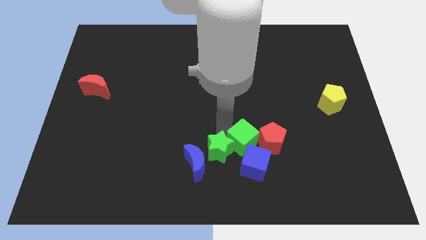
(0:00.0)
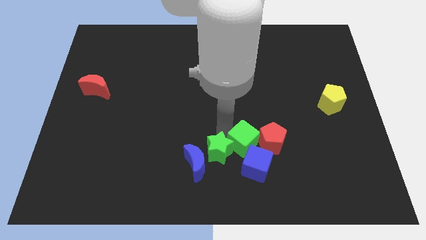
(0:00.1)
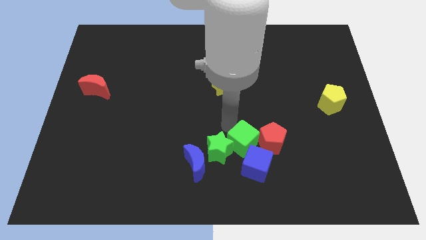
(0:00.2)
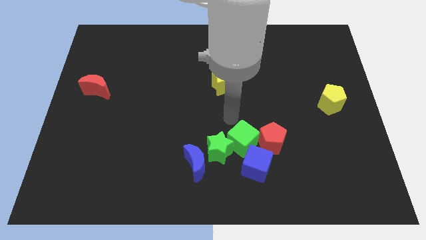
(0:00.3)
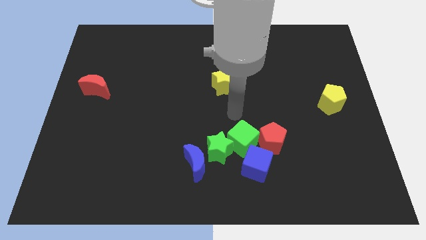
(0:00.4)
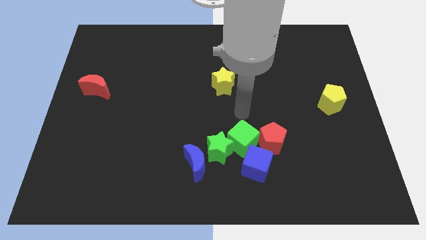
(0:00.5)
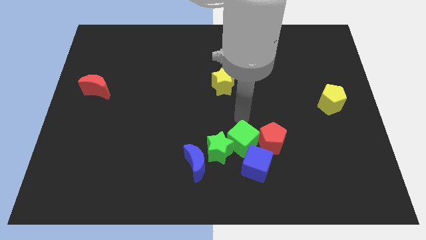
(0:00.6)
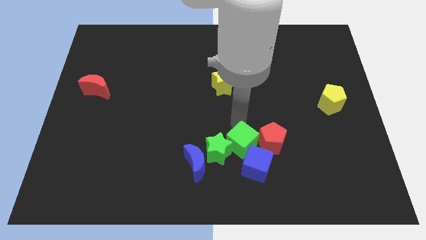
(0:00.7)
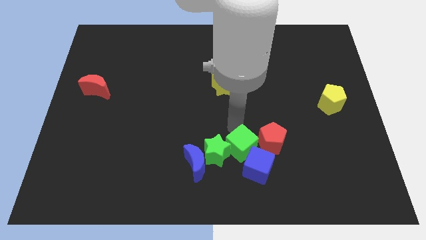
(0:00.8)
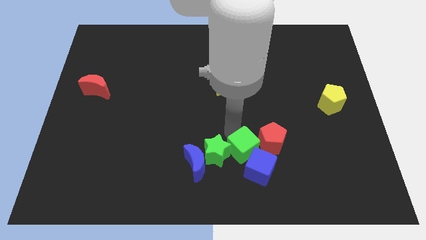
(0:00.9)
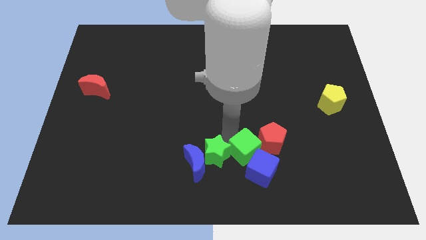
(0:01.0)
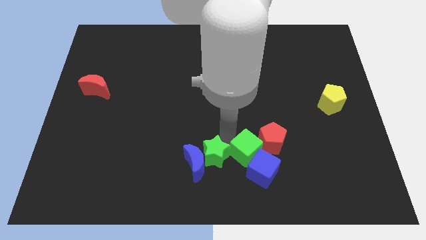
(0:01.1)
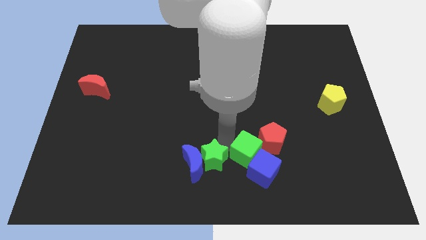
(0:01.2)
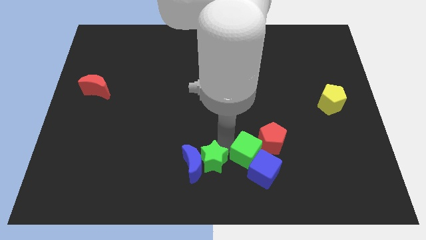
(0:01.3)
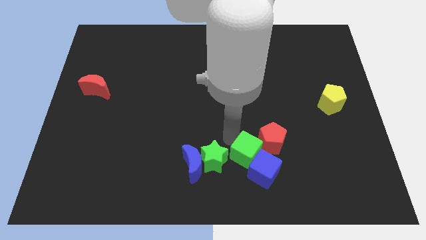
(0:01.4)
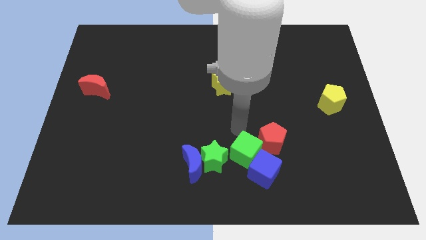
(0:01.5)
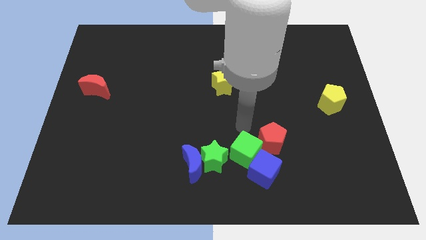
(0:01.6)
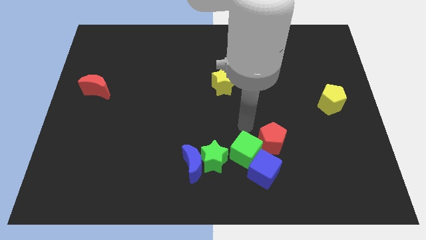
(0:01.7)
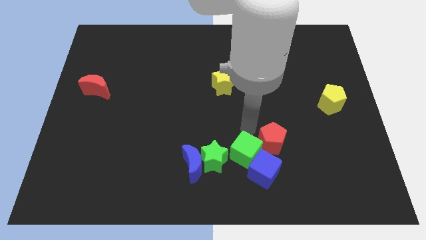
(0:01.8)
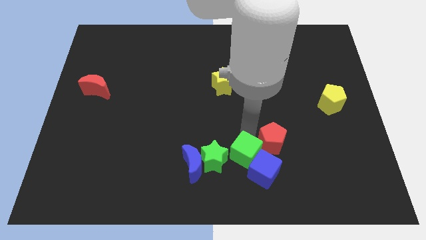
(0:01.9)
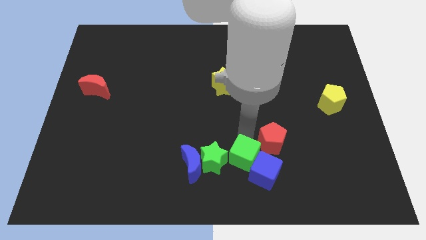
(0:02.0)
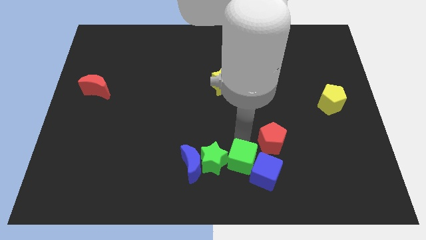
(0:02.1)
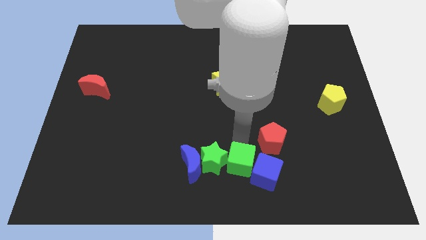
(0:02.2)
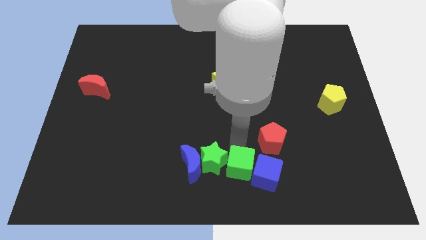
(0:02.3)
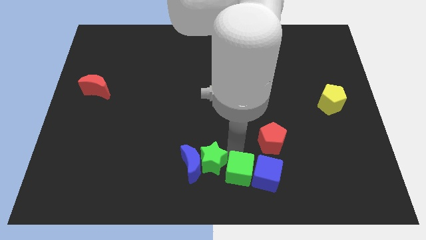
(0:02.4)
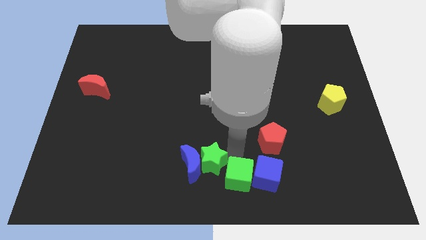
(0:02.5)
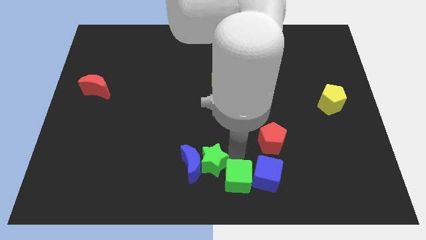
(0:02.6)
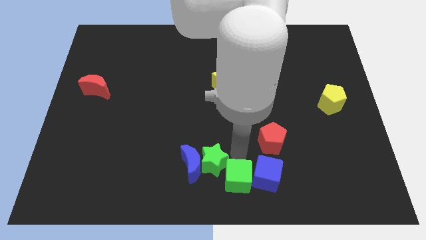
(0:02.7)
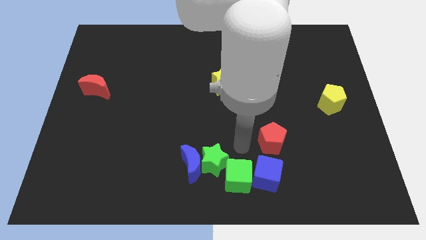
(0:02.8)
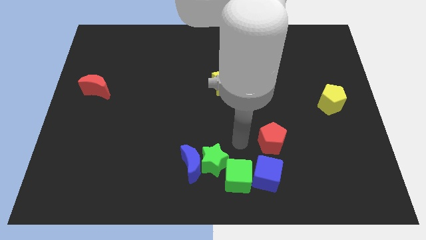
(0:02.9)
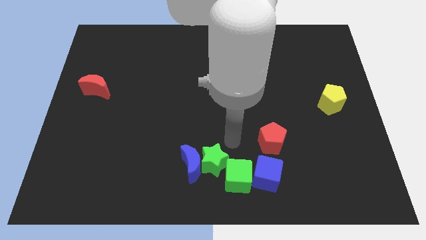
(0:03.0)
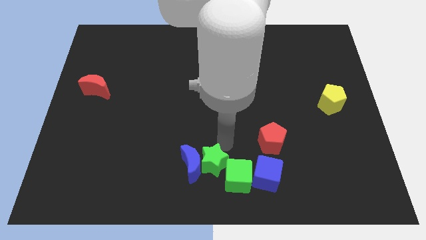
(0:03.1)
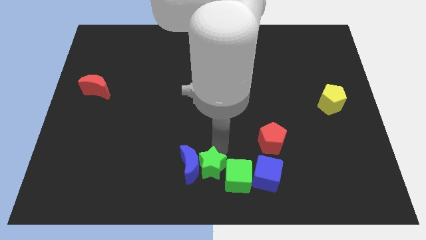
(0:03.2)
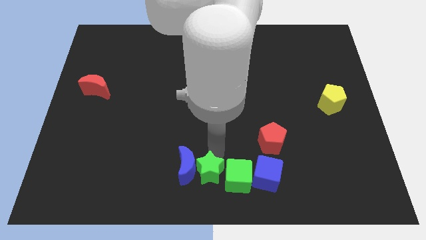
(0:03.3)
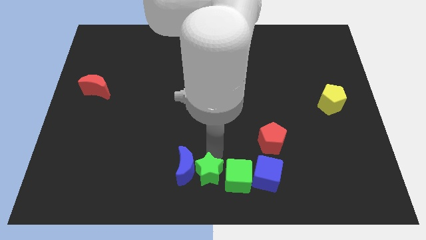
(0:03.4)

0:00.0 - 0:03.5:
adjust the green cube and star between blue cube and blue moon horizontally

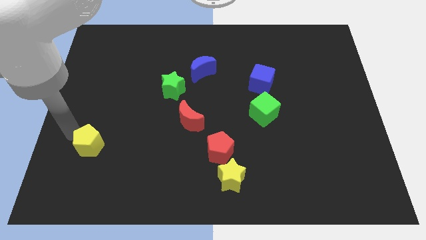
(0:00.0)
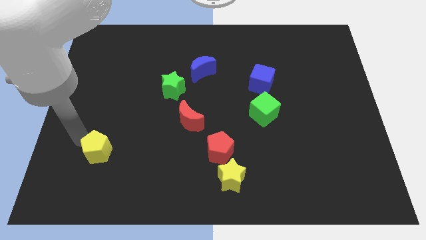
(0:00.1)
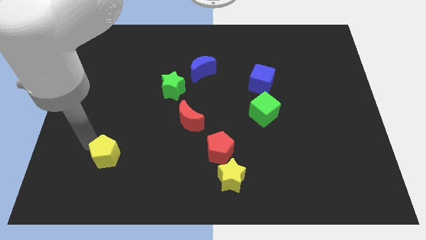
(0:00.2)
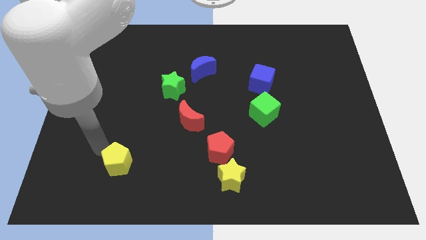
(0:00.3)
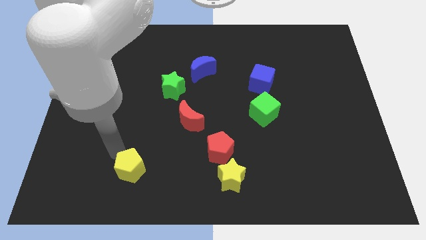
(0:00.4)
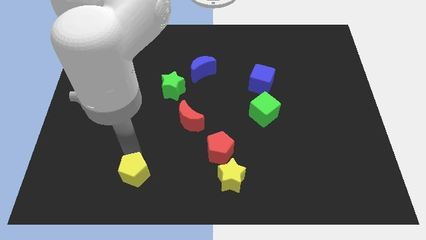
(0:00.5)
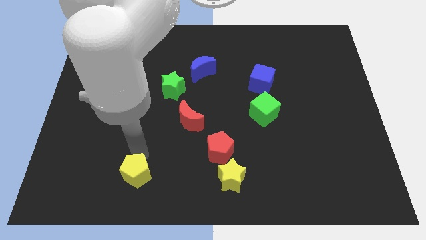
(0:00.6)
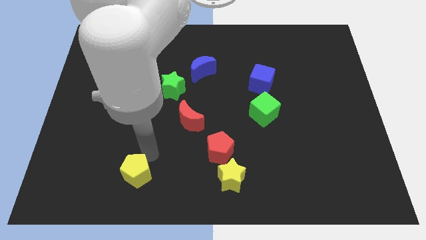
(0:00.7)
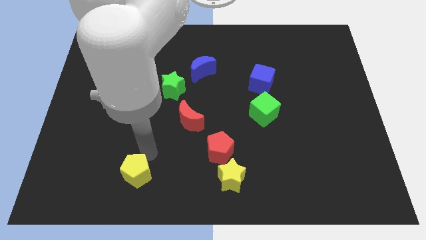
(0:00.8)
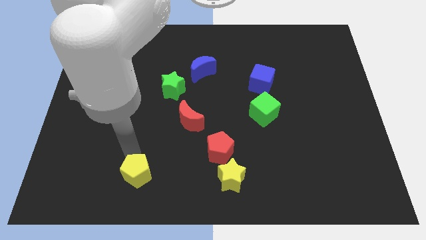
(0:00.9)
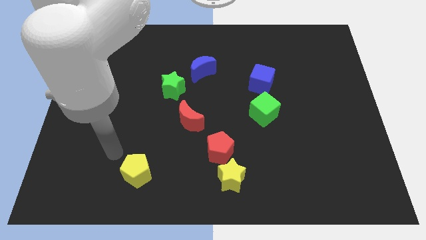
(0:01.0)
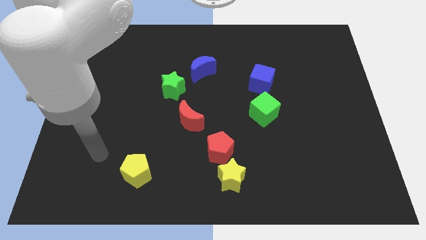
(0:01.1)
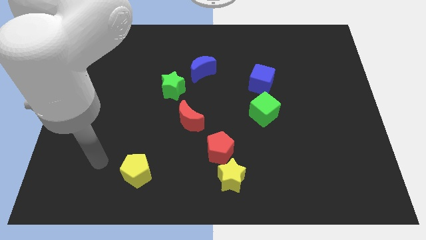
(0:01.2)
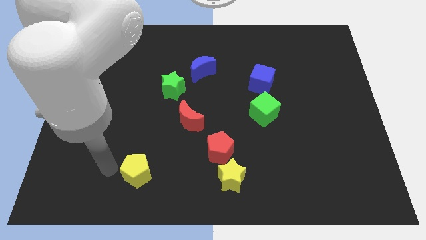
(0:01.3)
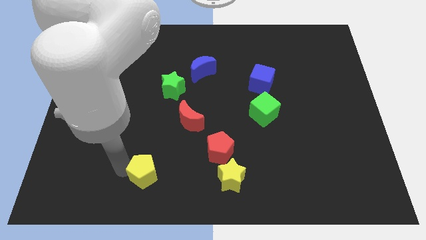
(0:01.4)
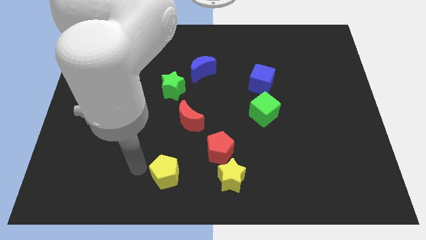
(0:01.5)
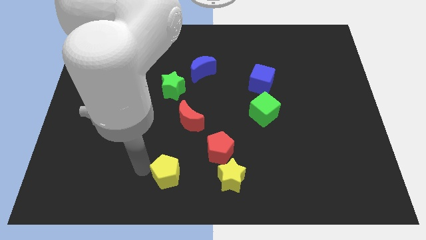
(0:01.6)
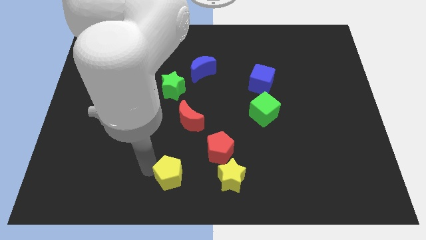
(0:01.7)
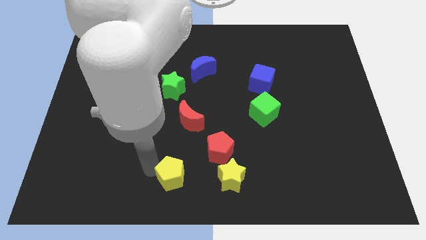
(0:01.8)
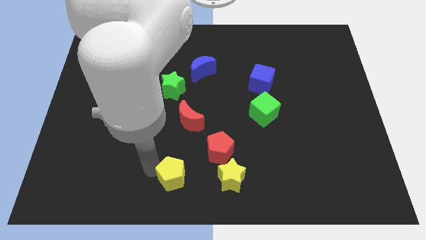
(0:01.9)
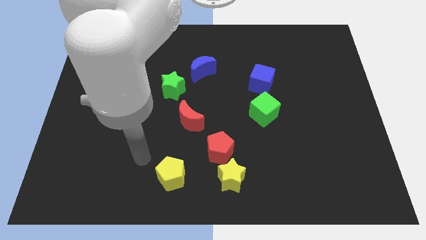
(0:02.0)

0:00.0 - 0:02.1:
push the yellow pentagon to the left of the yellow star

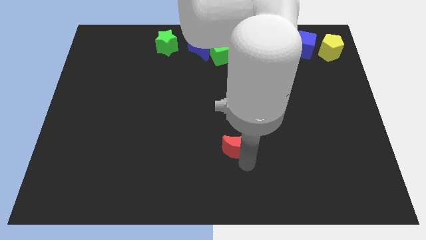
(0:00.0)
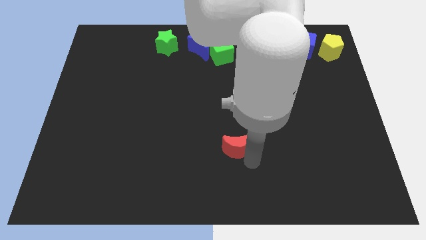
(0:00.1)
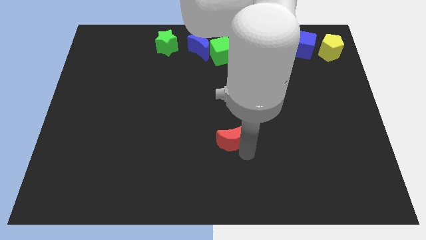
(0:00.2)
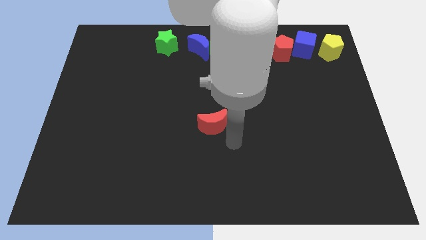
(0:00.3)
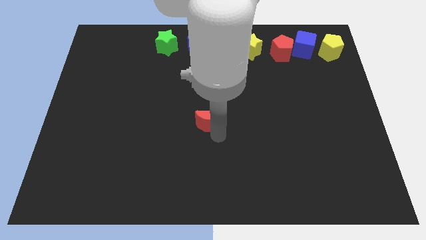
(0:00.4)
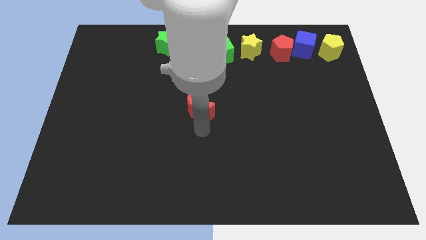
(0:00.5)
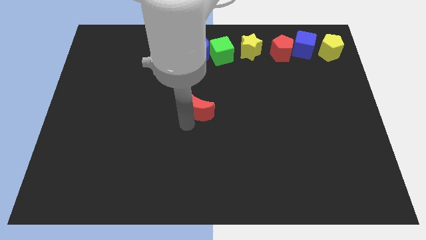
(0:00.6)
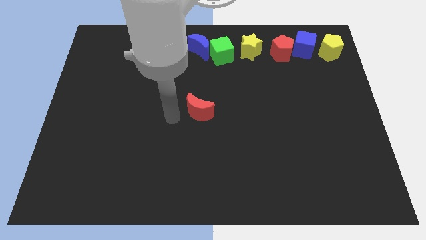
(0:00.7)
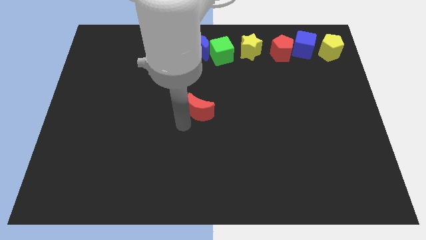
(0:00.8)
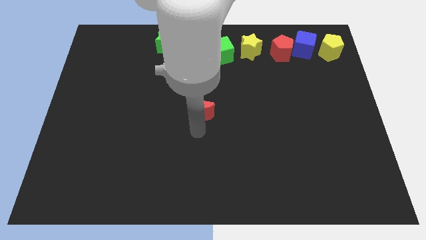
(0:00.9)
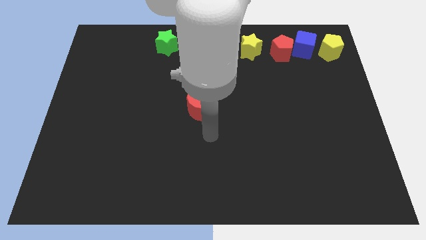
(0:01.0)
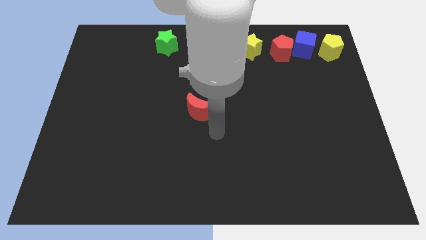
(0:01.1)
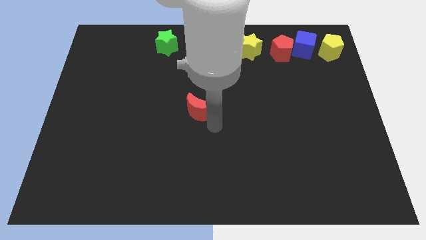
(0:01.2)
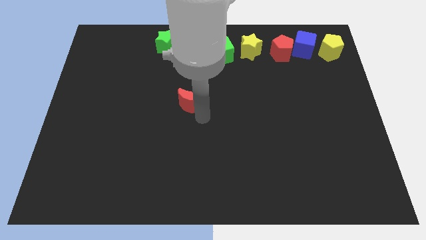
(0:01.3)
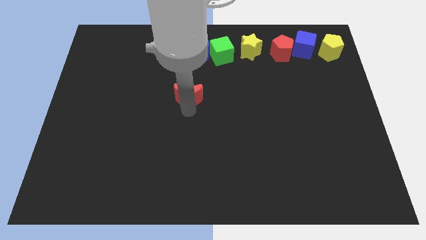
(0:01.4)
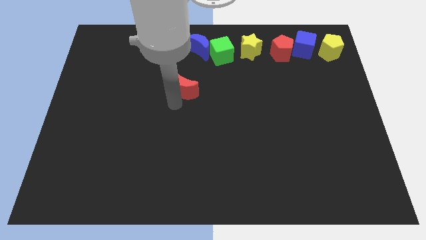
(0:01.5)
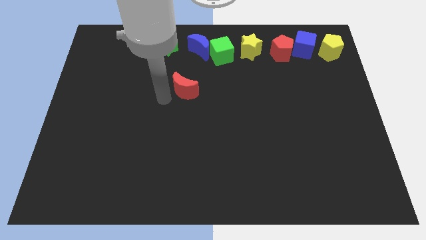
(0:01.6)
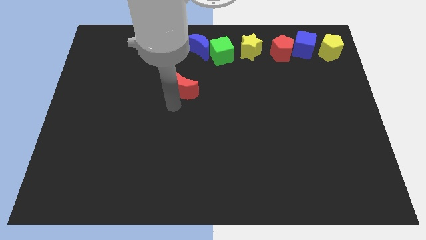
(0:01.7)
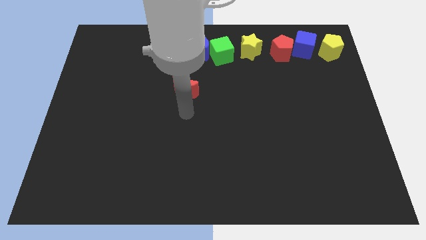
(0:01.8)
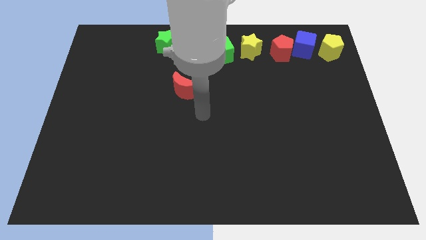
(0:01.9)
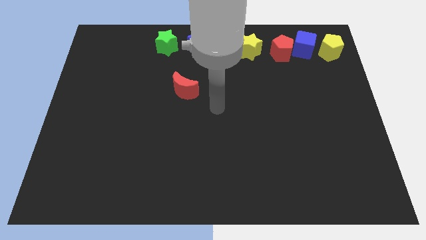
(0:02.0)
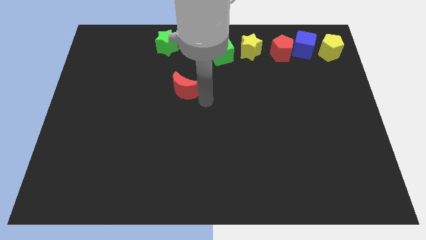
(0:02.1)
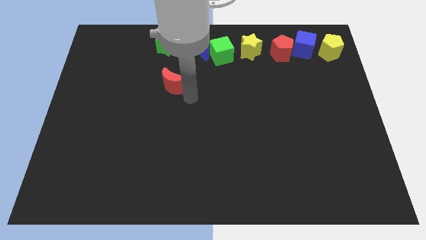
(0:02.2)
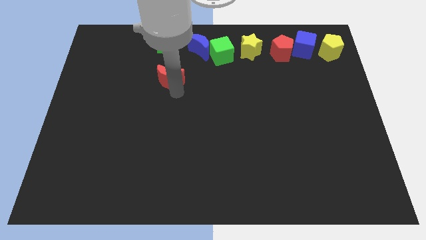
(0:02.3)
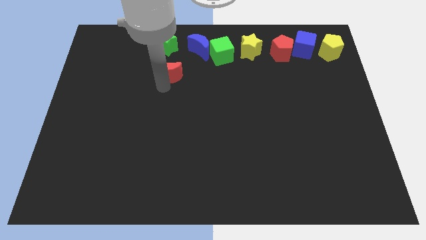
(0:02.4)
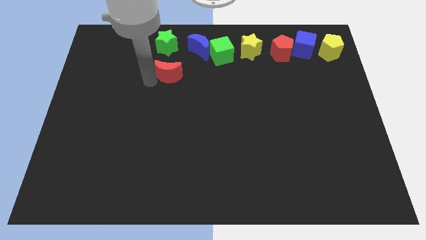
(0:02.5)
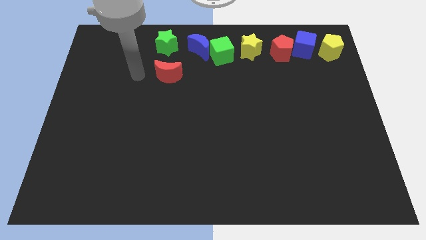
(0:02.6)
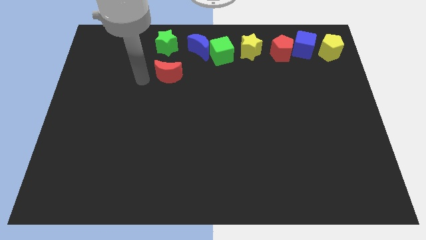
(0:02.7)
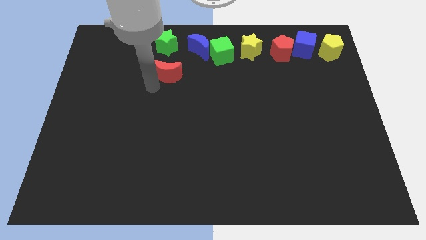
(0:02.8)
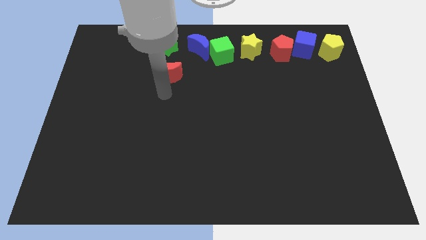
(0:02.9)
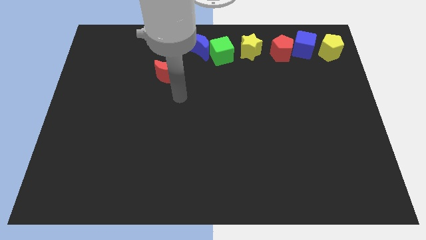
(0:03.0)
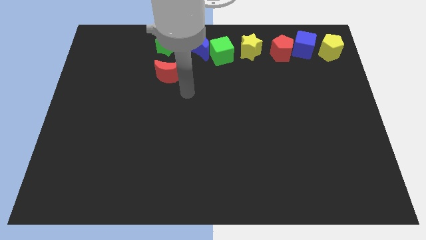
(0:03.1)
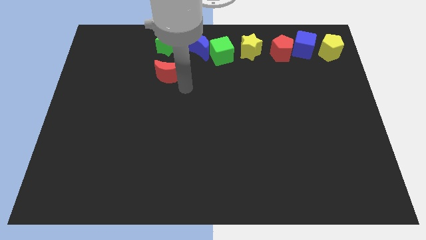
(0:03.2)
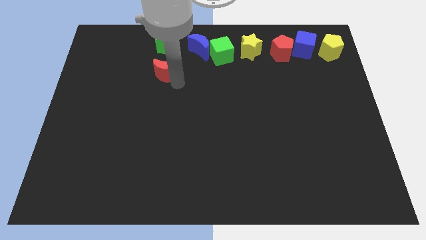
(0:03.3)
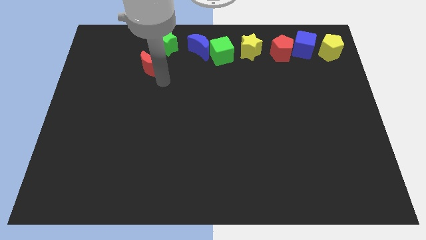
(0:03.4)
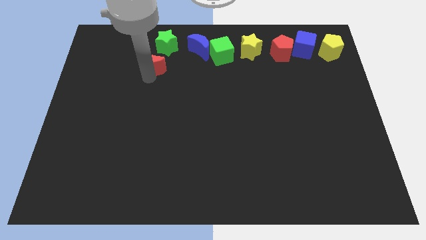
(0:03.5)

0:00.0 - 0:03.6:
move the red crescent below the green star
